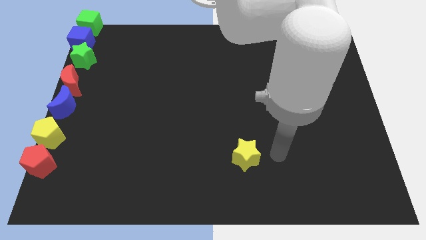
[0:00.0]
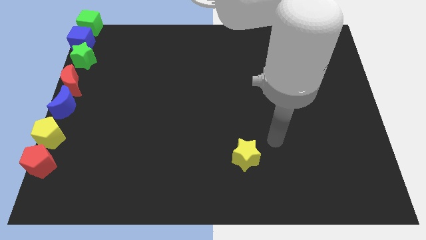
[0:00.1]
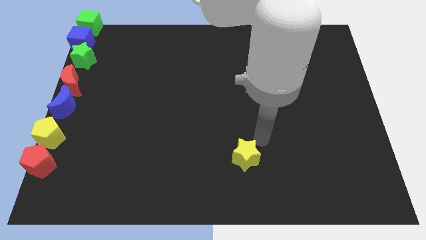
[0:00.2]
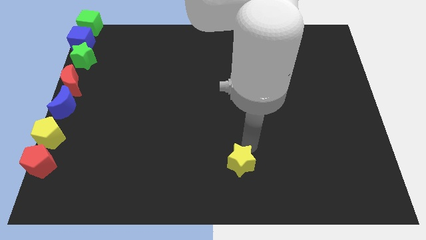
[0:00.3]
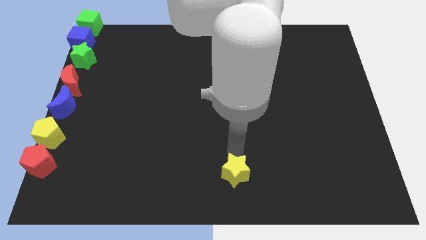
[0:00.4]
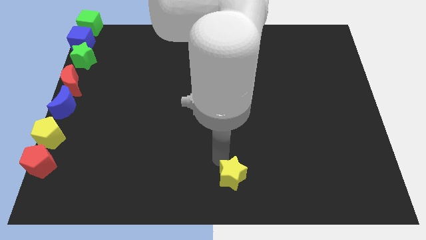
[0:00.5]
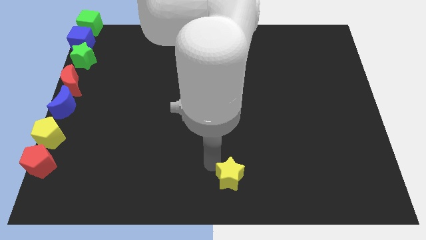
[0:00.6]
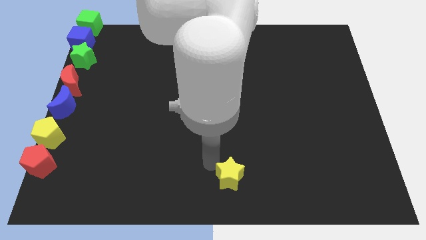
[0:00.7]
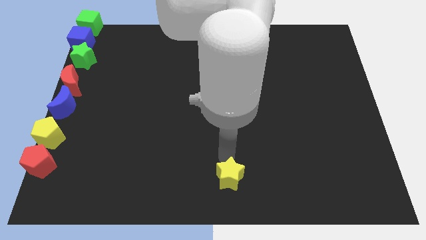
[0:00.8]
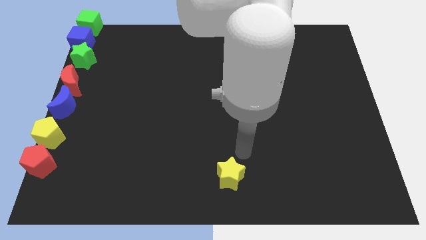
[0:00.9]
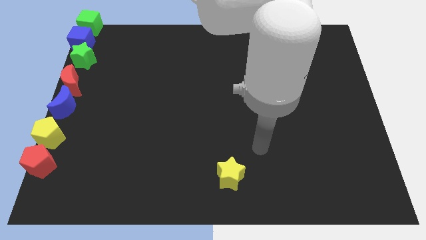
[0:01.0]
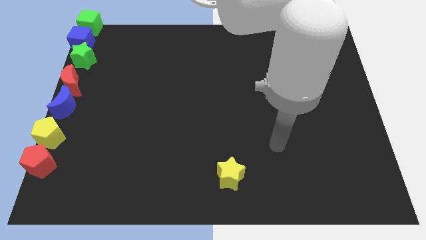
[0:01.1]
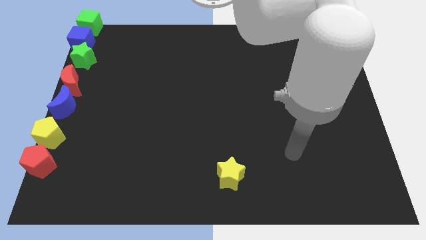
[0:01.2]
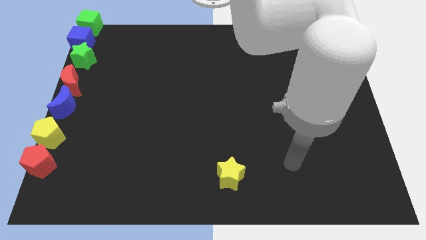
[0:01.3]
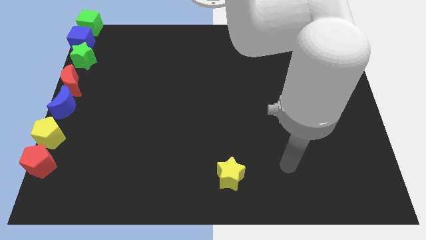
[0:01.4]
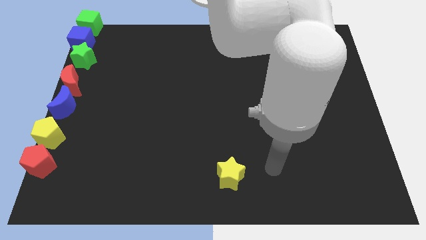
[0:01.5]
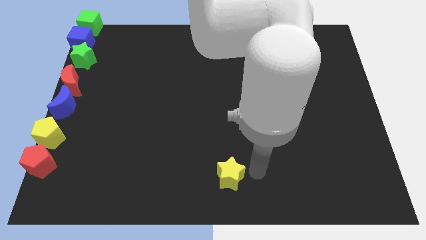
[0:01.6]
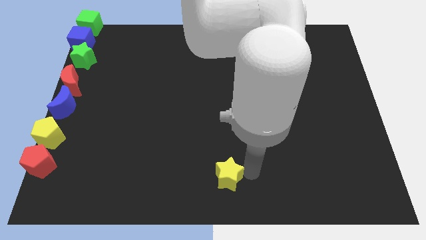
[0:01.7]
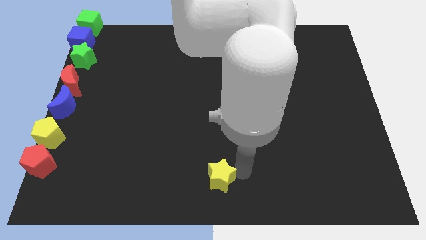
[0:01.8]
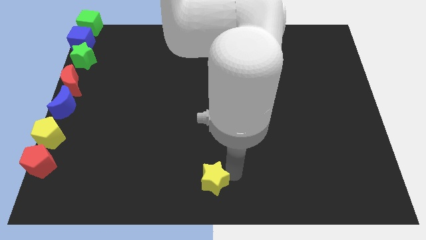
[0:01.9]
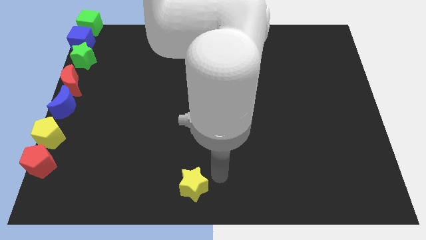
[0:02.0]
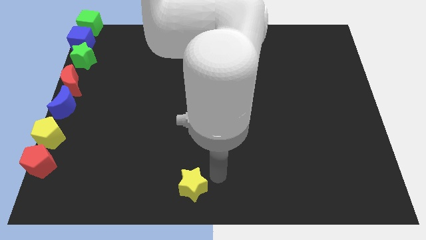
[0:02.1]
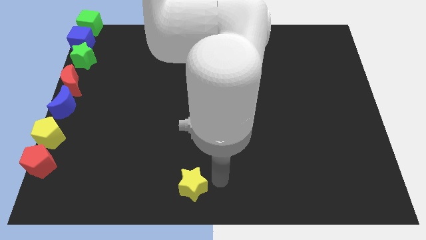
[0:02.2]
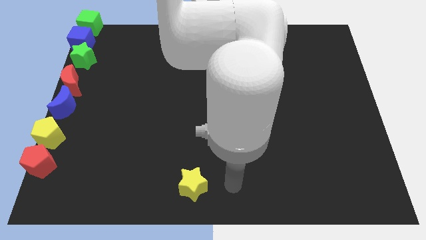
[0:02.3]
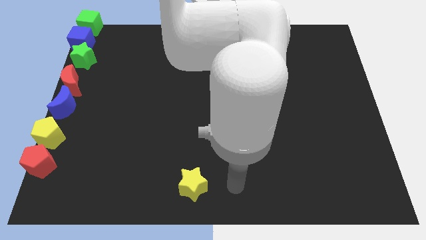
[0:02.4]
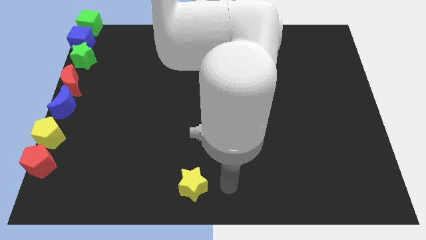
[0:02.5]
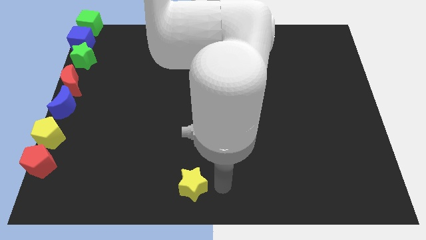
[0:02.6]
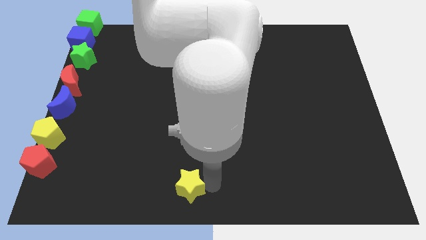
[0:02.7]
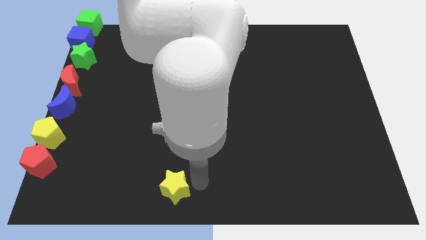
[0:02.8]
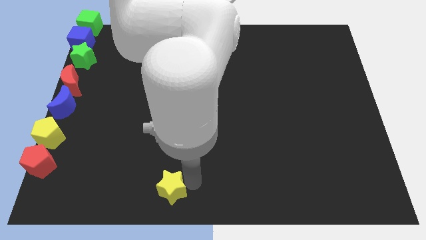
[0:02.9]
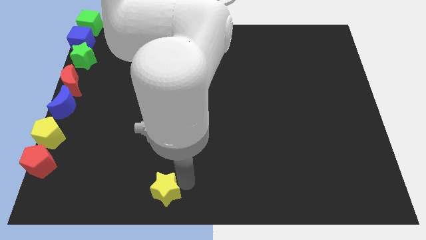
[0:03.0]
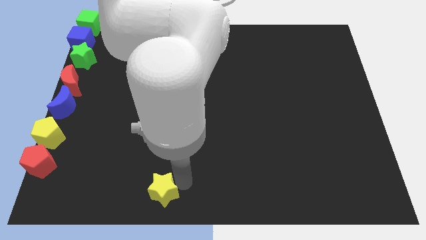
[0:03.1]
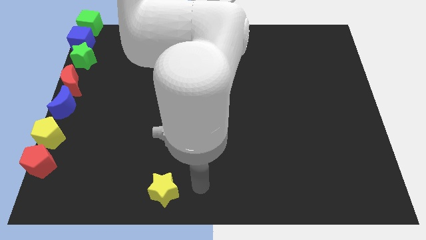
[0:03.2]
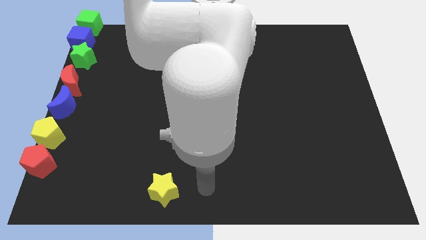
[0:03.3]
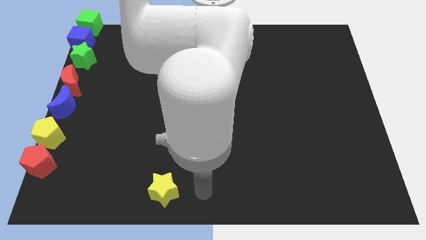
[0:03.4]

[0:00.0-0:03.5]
move the yellow star to the bottom of the board

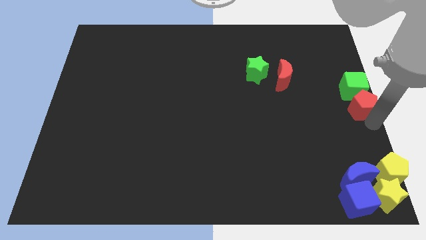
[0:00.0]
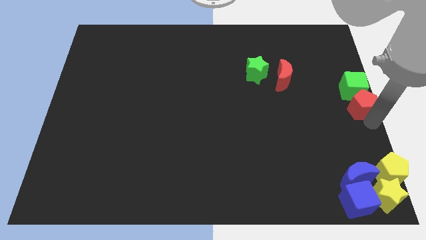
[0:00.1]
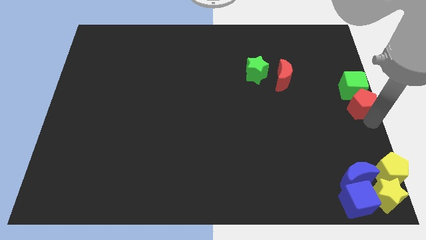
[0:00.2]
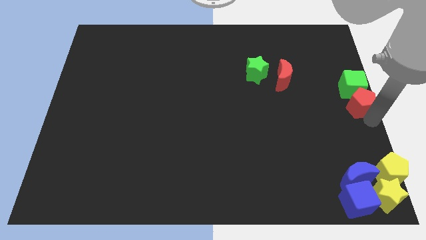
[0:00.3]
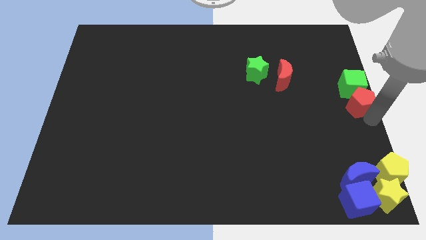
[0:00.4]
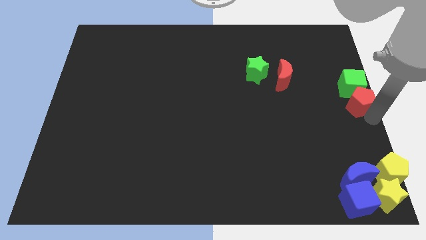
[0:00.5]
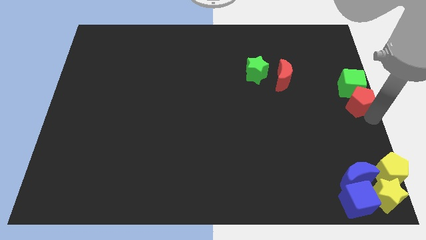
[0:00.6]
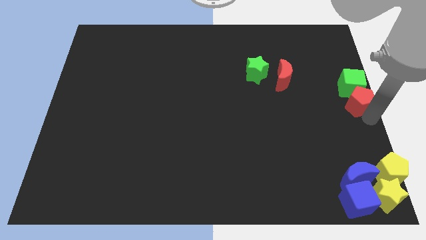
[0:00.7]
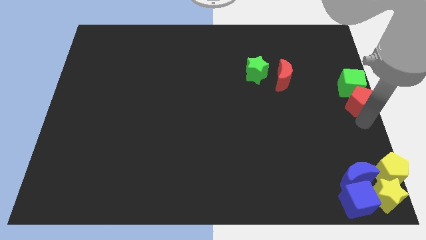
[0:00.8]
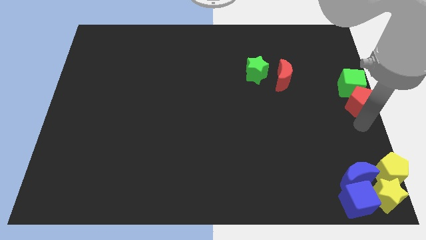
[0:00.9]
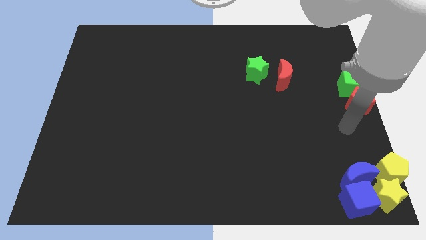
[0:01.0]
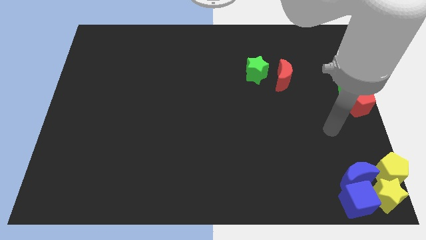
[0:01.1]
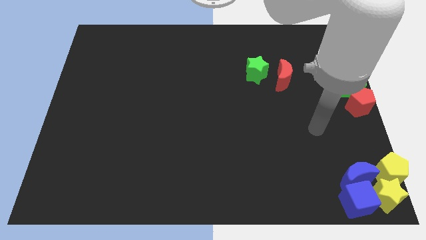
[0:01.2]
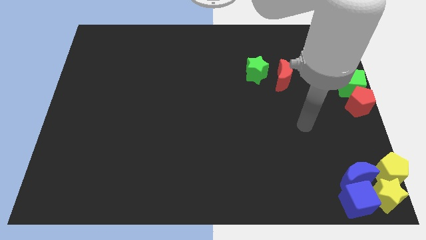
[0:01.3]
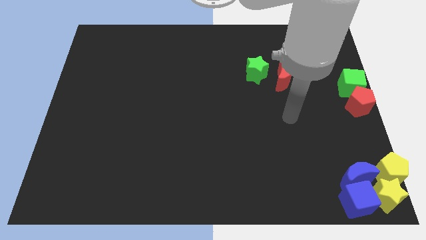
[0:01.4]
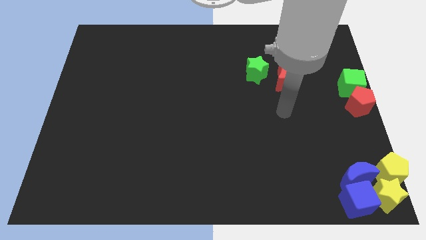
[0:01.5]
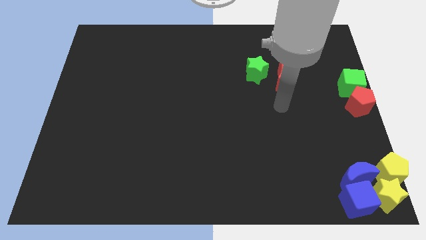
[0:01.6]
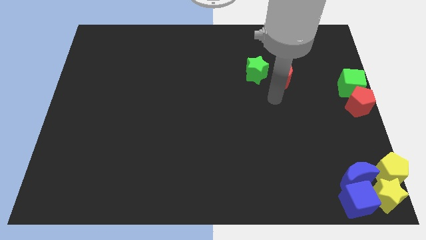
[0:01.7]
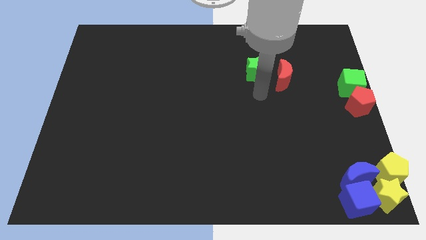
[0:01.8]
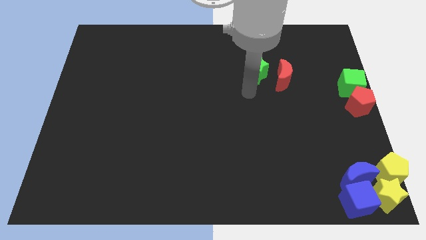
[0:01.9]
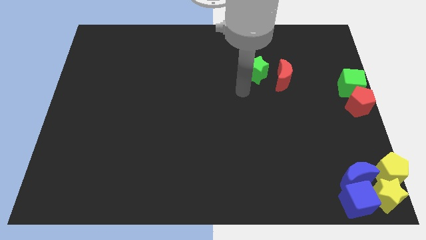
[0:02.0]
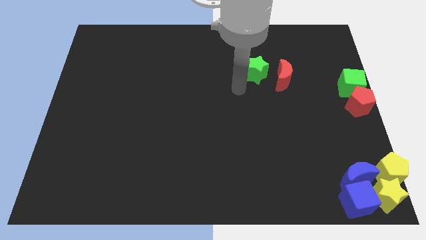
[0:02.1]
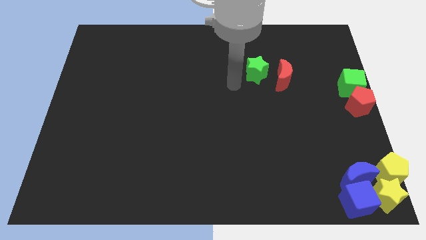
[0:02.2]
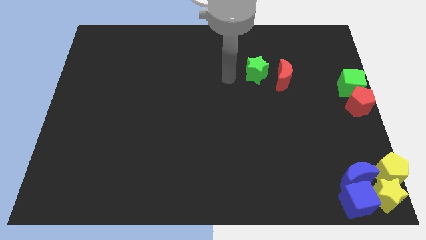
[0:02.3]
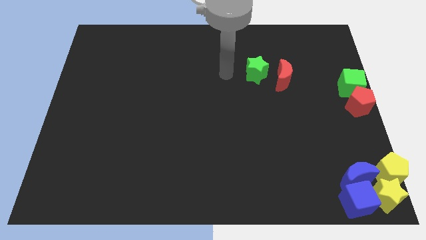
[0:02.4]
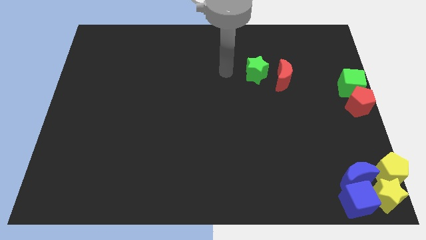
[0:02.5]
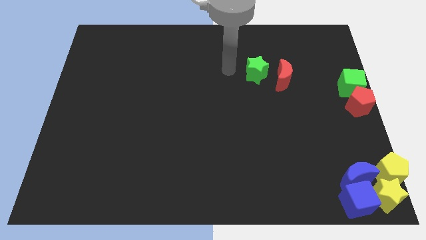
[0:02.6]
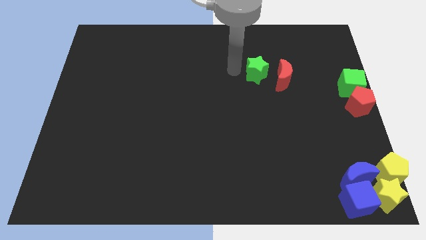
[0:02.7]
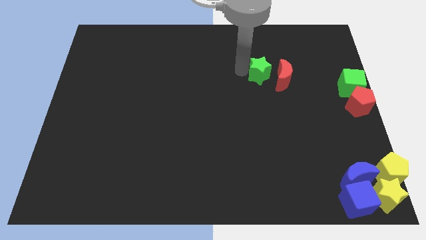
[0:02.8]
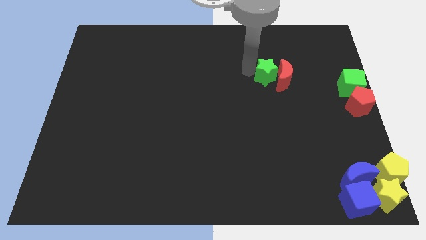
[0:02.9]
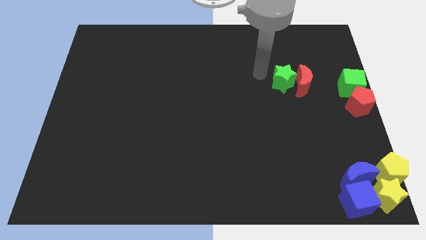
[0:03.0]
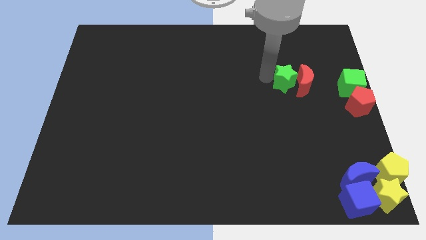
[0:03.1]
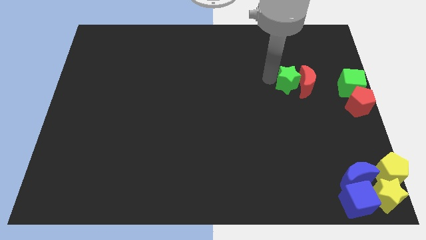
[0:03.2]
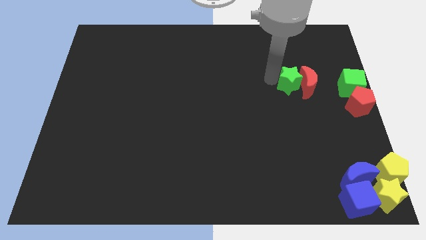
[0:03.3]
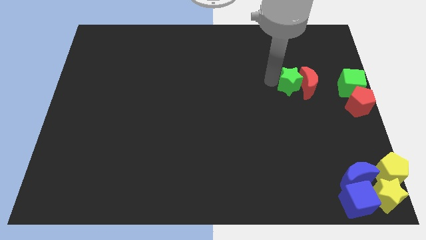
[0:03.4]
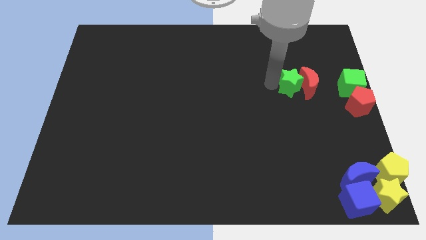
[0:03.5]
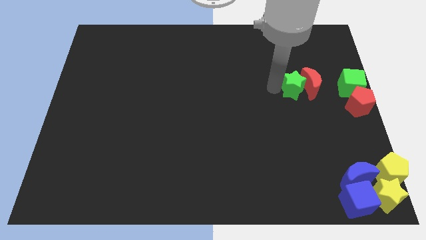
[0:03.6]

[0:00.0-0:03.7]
push the green star into the red crescent

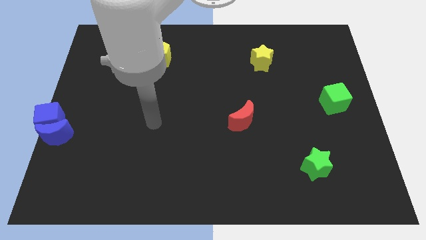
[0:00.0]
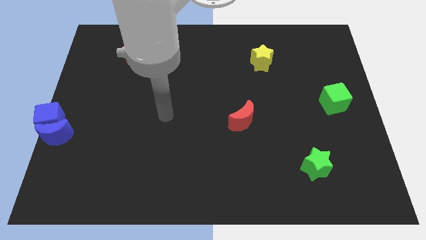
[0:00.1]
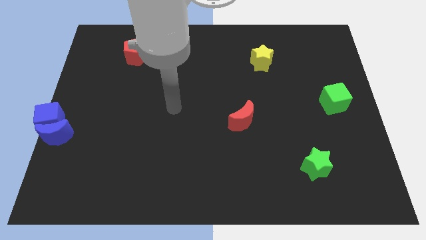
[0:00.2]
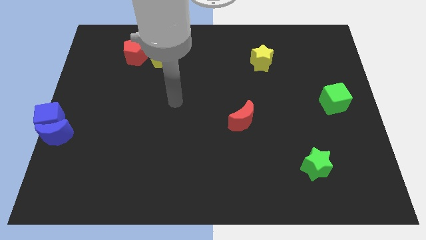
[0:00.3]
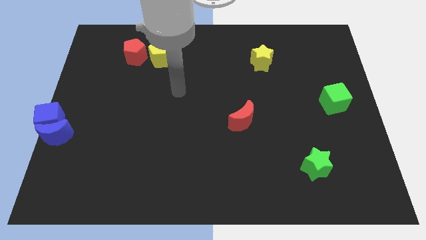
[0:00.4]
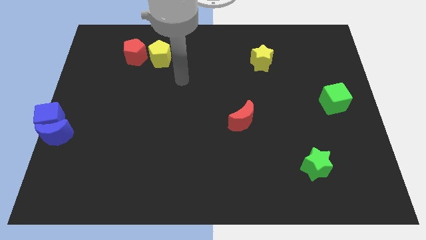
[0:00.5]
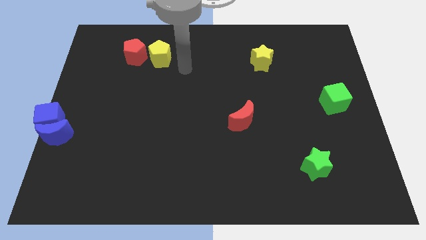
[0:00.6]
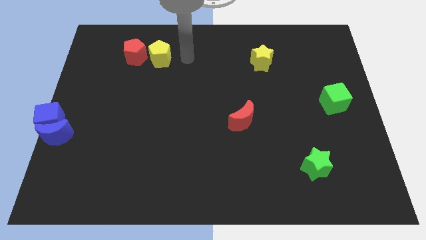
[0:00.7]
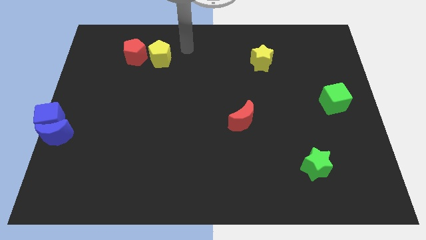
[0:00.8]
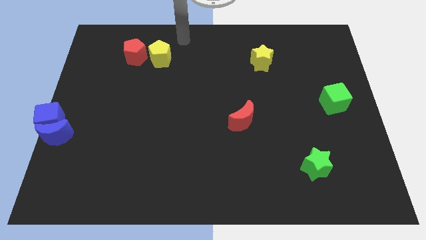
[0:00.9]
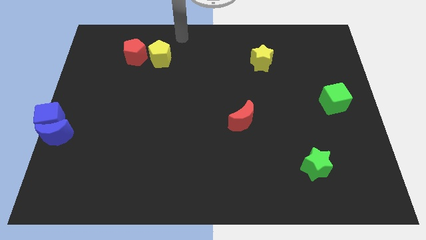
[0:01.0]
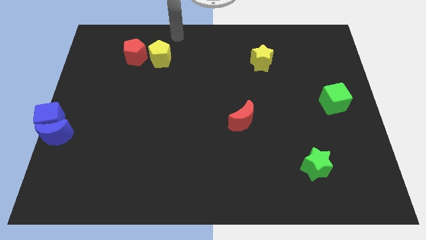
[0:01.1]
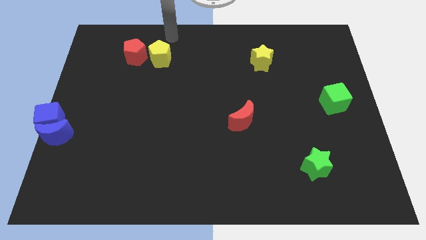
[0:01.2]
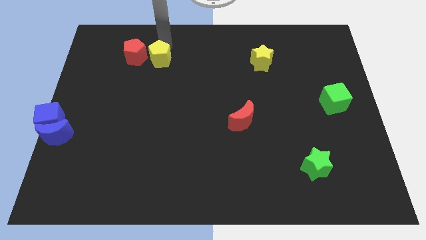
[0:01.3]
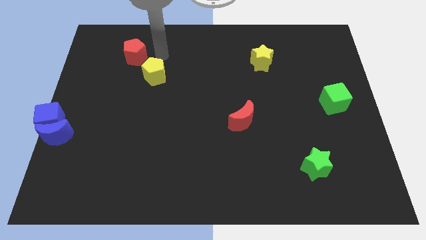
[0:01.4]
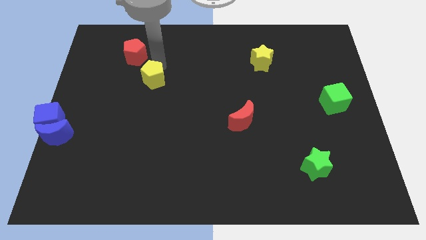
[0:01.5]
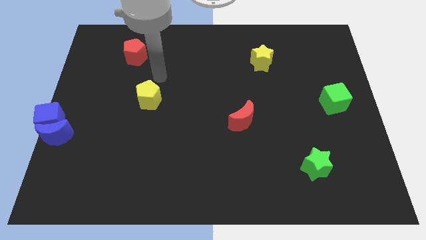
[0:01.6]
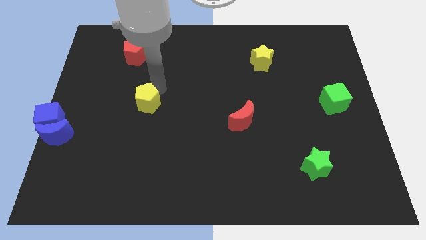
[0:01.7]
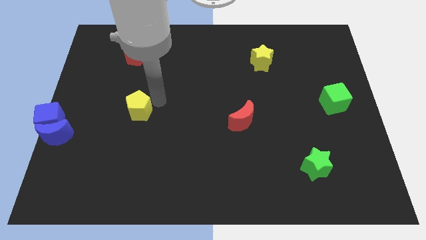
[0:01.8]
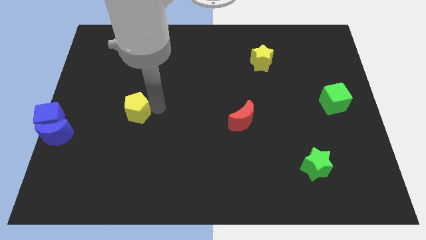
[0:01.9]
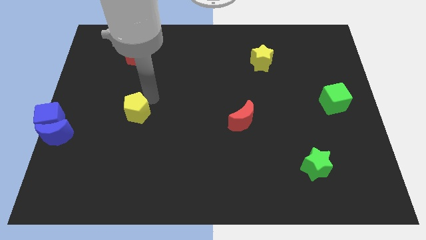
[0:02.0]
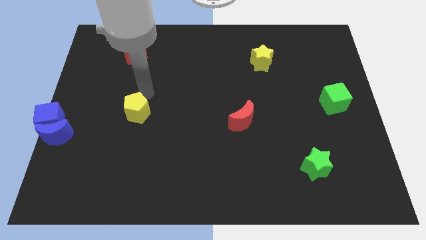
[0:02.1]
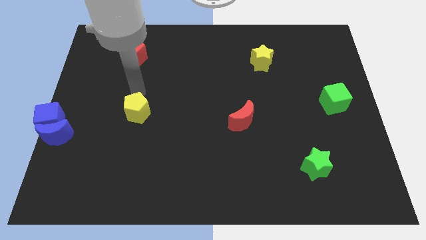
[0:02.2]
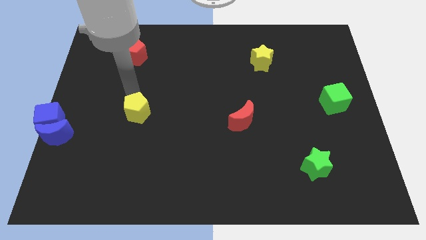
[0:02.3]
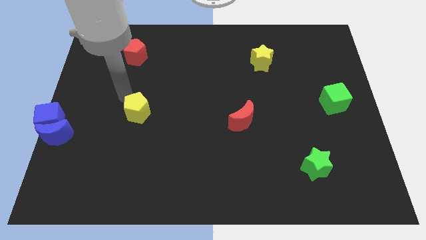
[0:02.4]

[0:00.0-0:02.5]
move the yellow pentagon below the red pentagon
